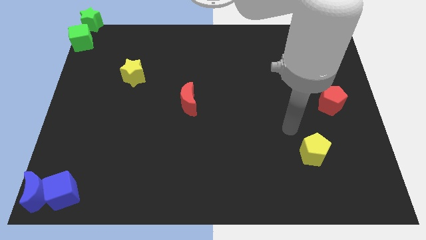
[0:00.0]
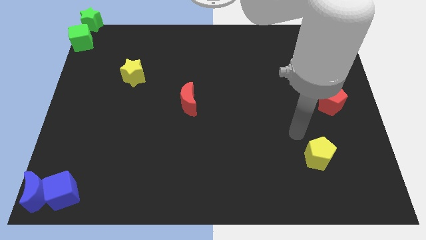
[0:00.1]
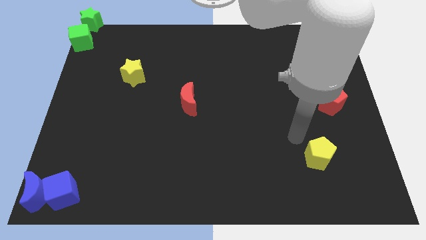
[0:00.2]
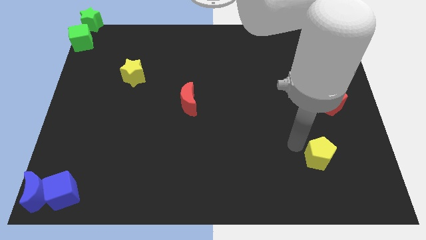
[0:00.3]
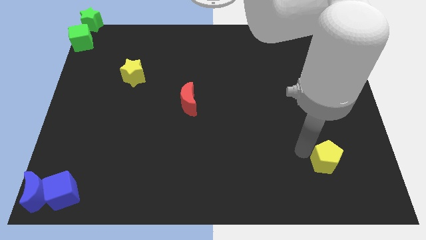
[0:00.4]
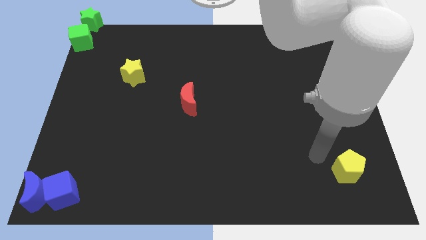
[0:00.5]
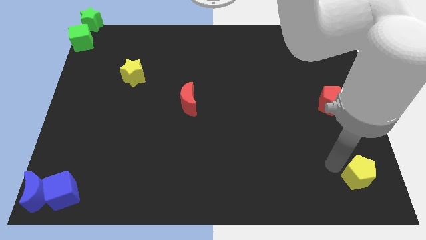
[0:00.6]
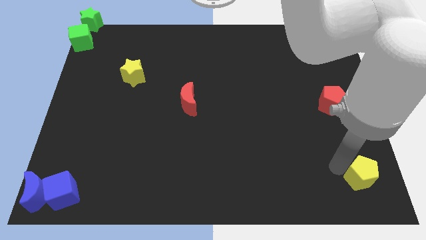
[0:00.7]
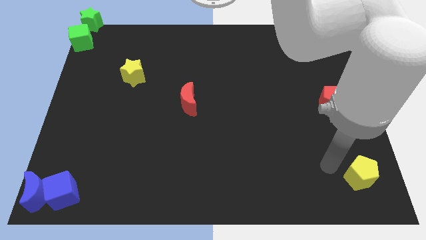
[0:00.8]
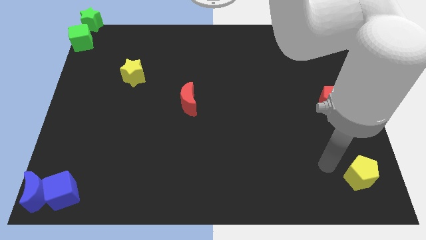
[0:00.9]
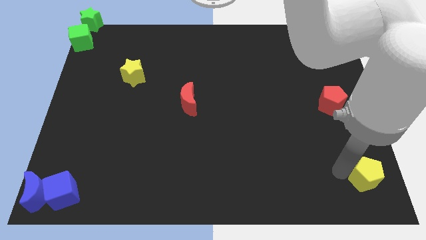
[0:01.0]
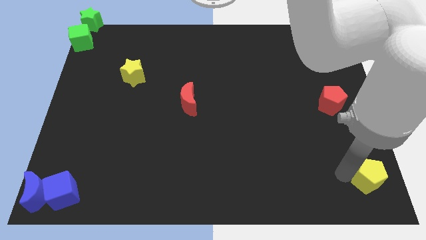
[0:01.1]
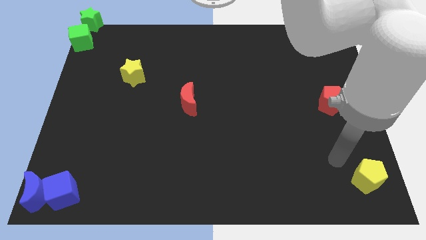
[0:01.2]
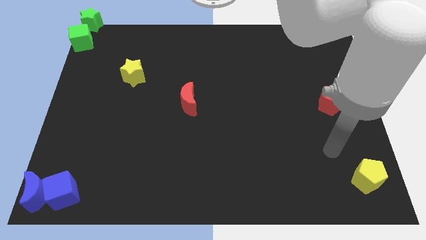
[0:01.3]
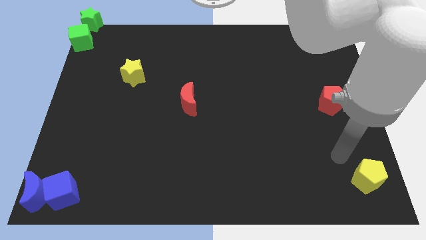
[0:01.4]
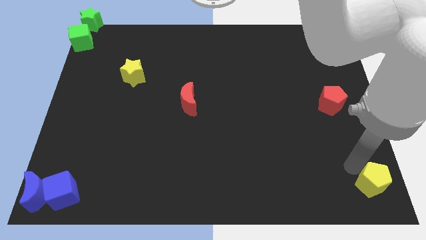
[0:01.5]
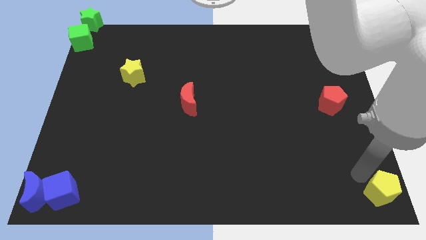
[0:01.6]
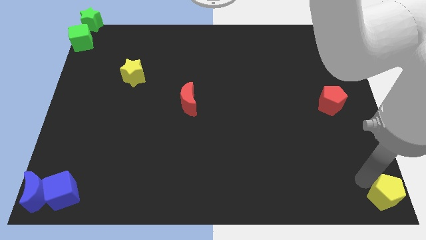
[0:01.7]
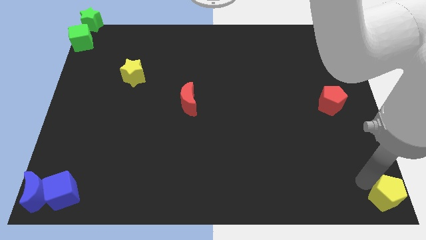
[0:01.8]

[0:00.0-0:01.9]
move the yellow pentagon to the bottom right corner of the board

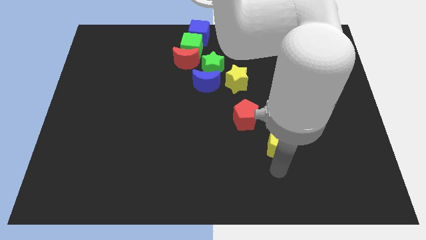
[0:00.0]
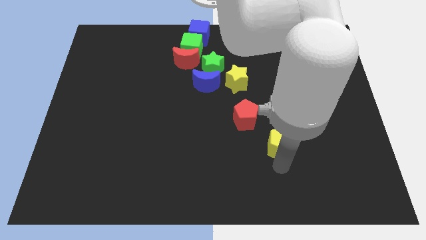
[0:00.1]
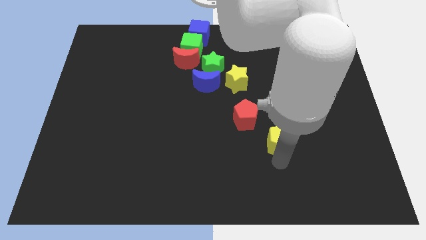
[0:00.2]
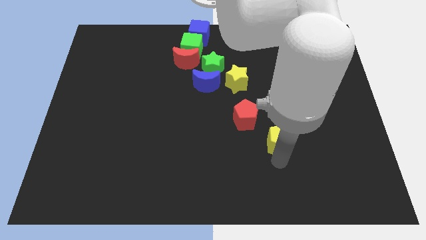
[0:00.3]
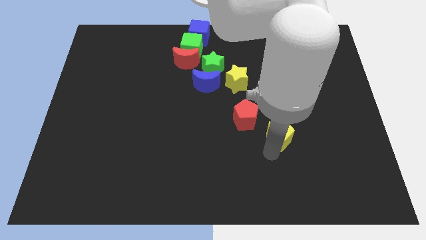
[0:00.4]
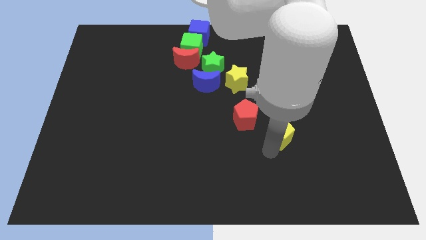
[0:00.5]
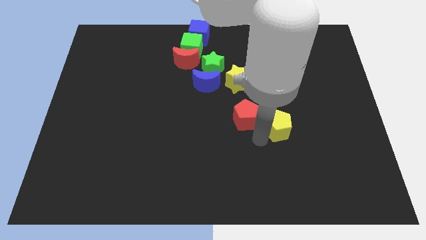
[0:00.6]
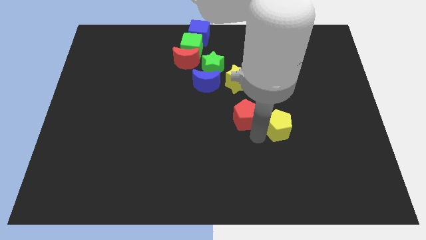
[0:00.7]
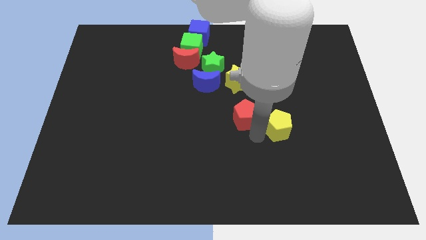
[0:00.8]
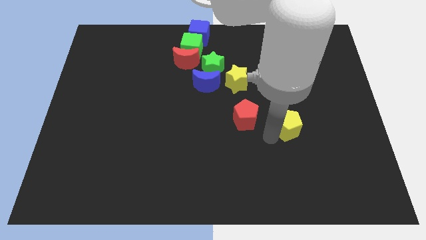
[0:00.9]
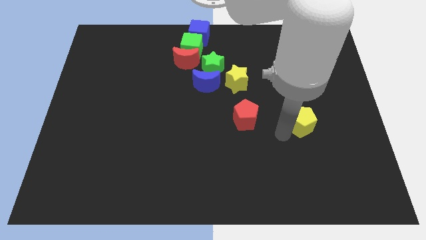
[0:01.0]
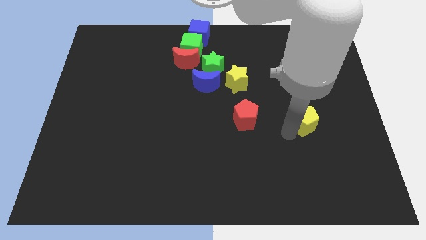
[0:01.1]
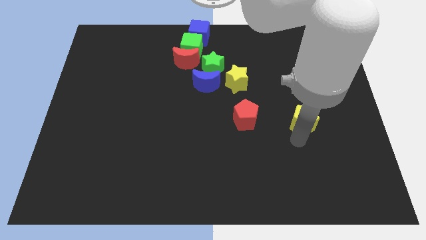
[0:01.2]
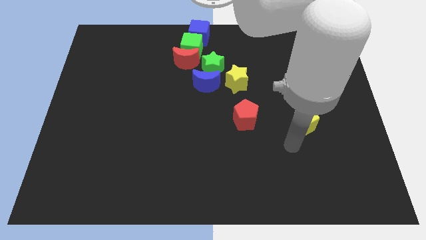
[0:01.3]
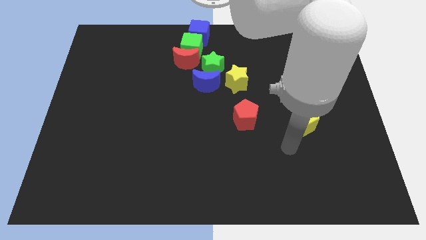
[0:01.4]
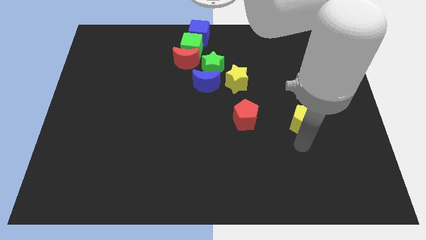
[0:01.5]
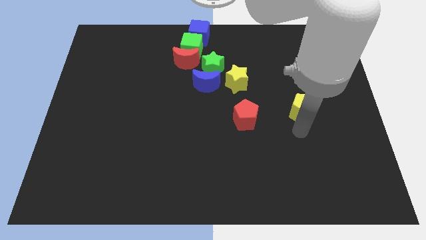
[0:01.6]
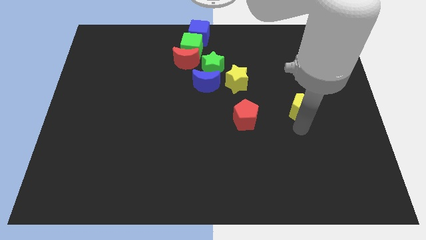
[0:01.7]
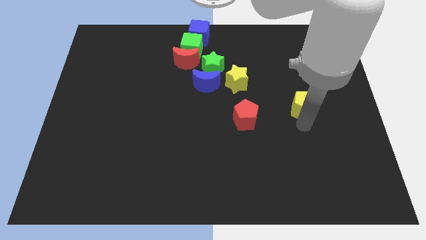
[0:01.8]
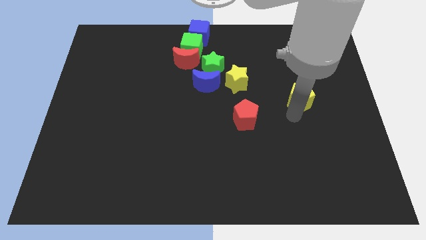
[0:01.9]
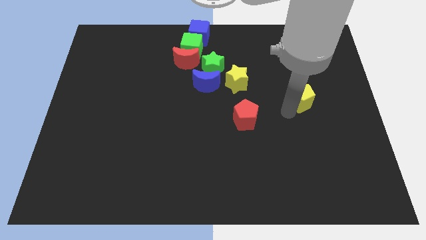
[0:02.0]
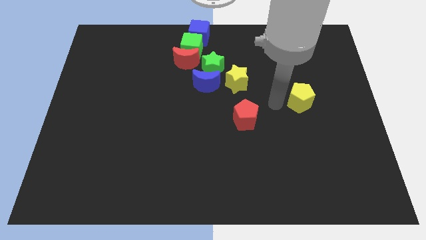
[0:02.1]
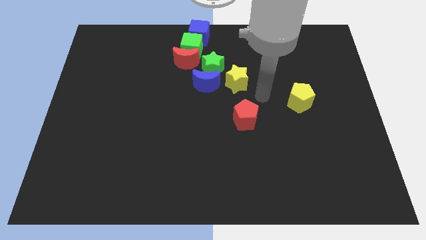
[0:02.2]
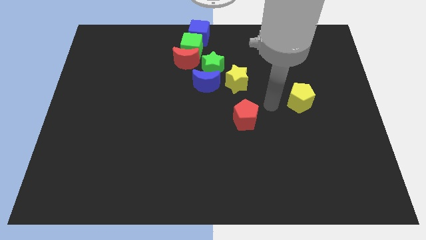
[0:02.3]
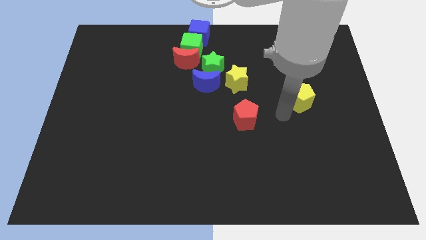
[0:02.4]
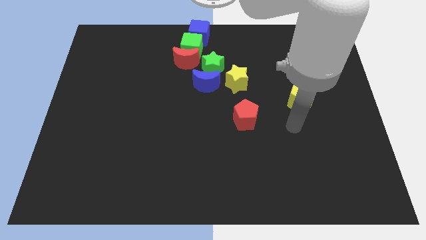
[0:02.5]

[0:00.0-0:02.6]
move the yellow pentagon diagonal to the yellow star

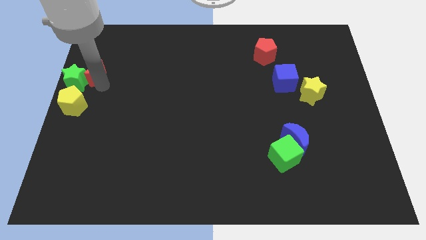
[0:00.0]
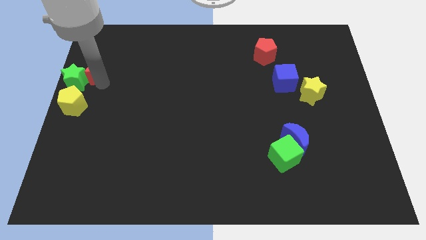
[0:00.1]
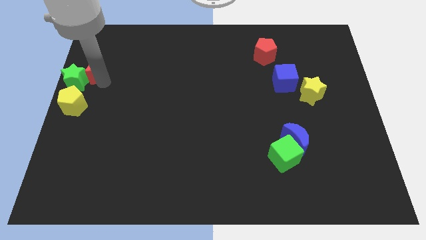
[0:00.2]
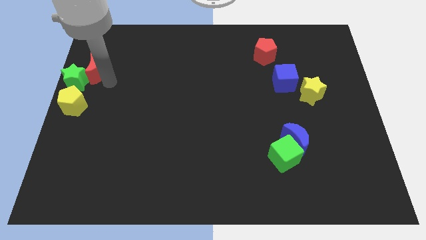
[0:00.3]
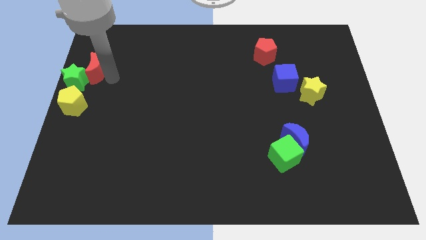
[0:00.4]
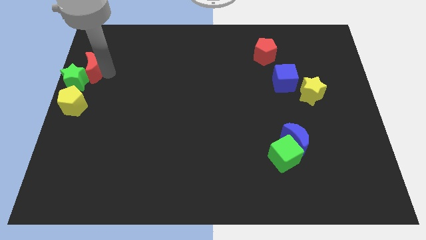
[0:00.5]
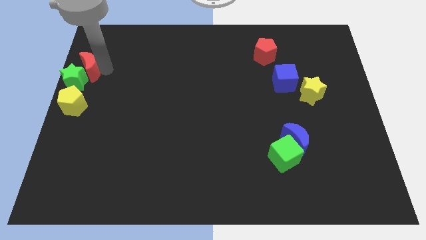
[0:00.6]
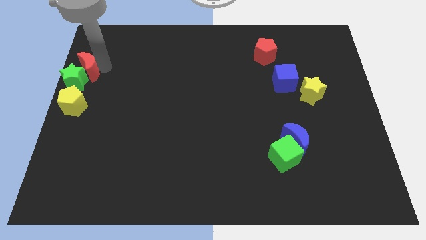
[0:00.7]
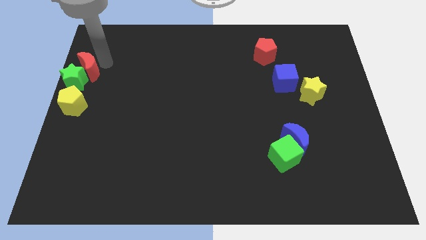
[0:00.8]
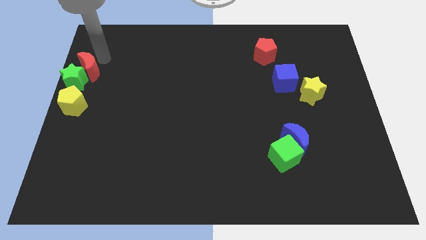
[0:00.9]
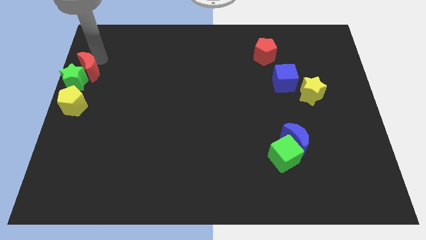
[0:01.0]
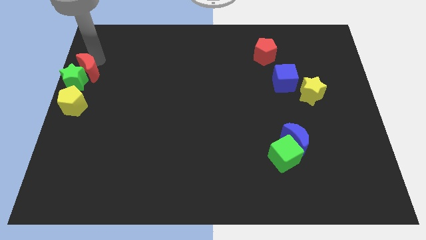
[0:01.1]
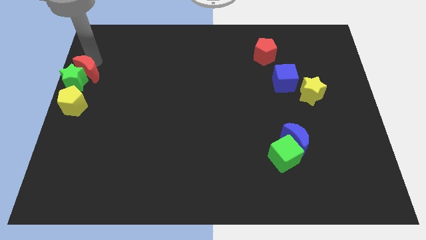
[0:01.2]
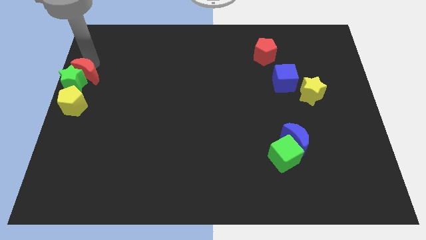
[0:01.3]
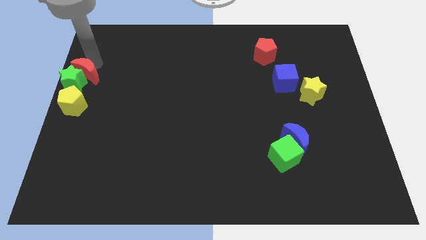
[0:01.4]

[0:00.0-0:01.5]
put the red crescent above the green star

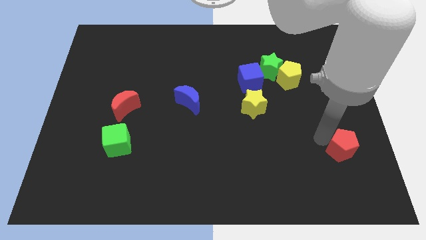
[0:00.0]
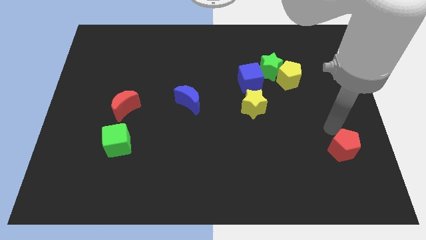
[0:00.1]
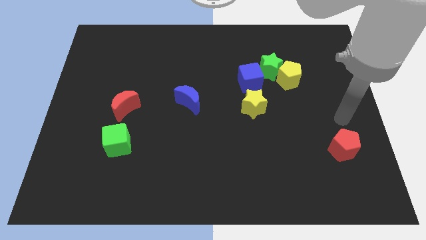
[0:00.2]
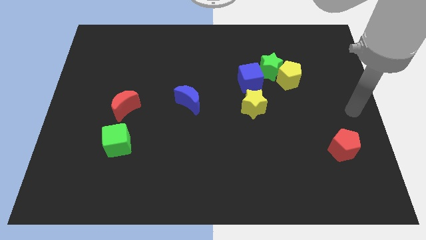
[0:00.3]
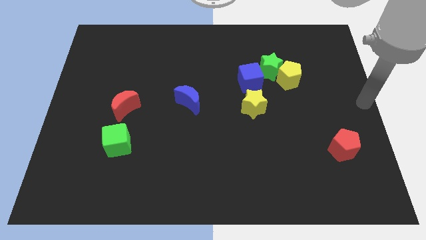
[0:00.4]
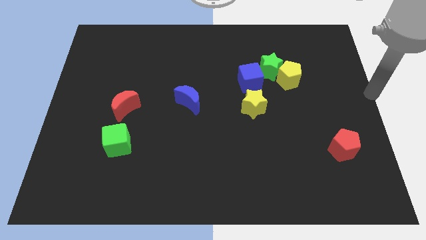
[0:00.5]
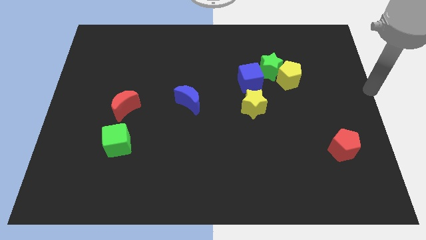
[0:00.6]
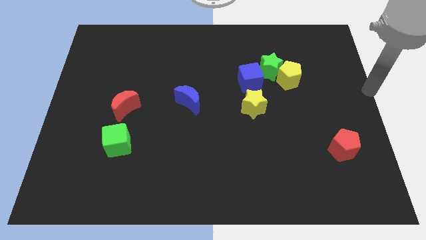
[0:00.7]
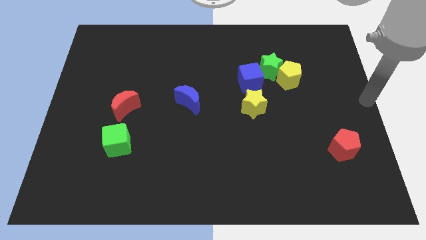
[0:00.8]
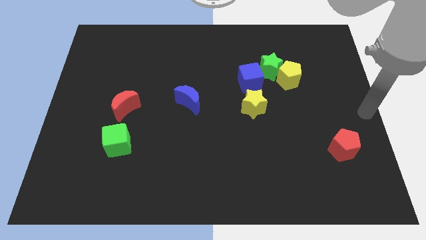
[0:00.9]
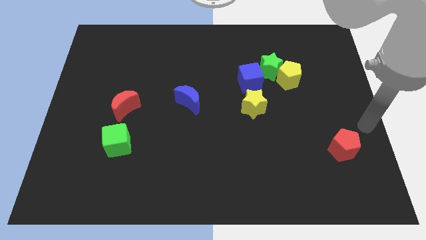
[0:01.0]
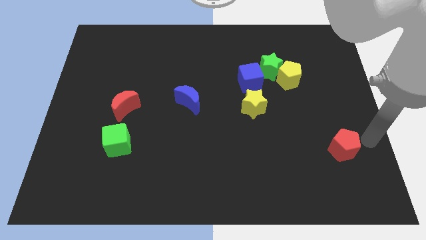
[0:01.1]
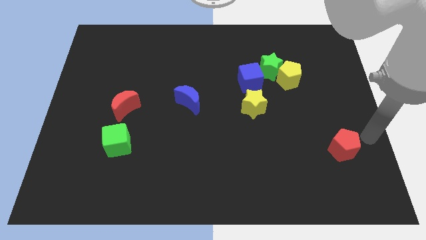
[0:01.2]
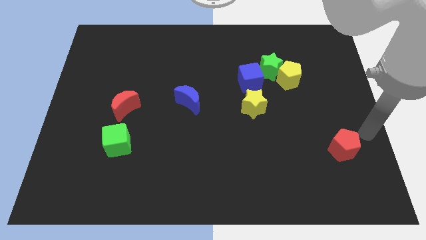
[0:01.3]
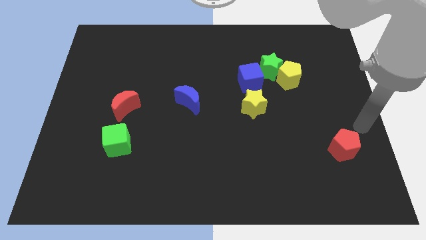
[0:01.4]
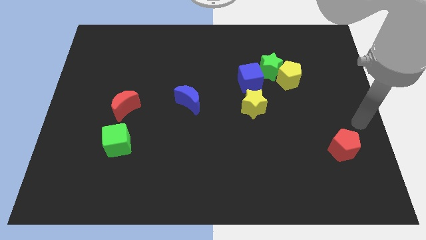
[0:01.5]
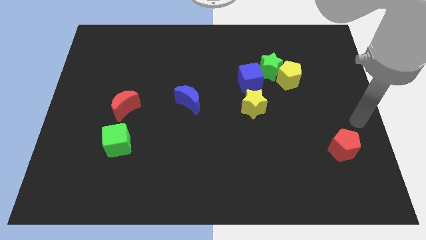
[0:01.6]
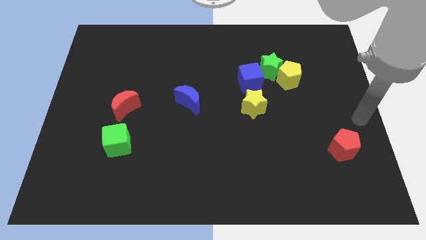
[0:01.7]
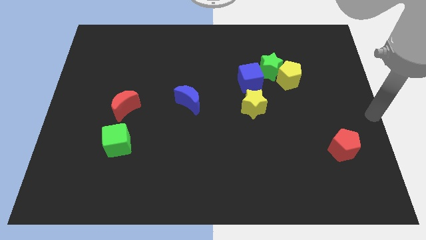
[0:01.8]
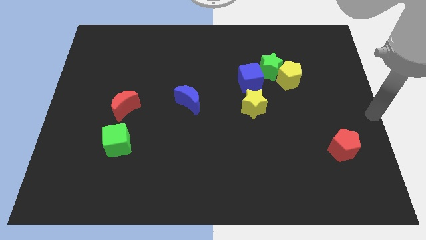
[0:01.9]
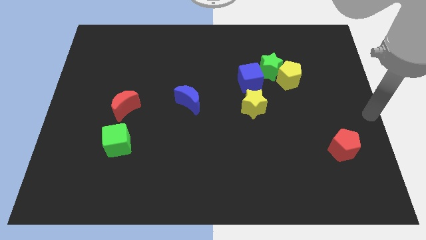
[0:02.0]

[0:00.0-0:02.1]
move your hand away from the red pentagon

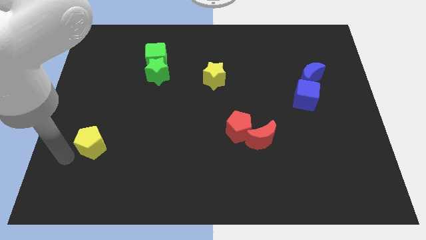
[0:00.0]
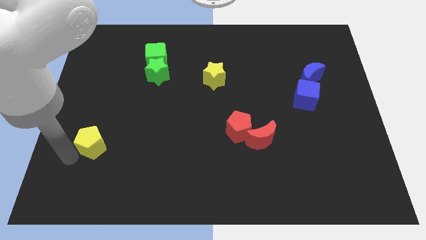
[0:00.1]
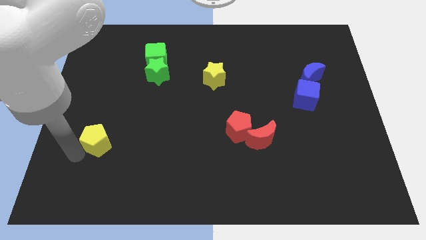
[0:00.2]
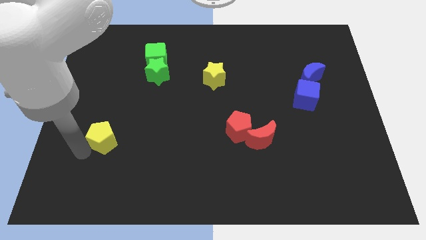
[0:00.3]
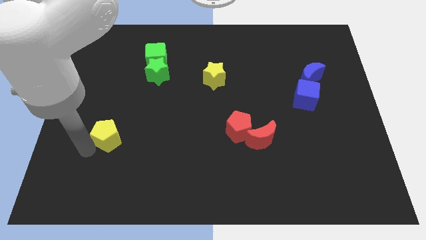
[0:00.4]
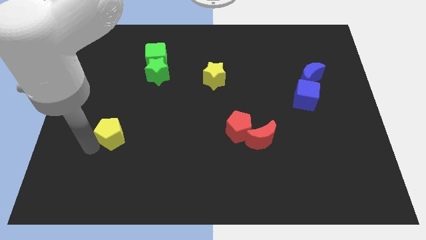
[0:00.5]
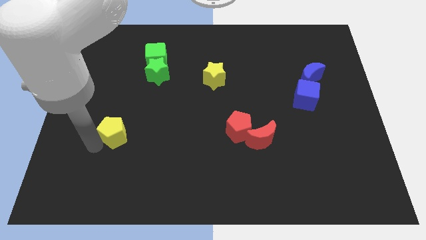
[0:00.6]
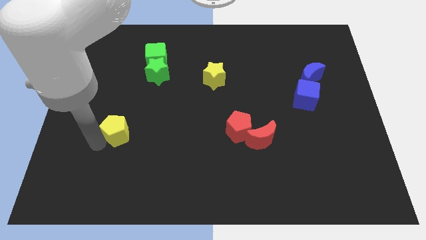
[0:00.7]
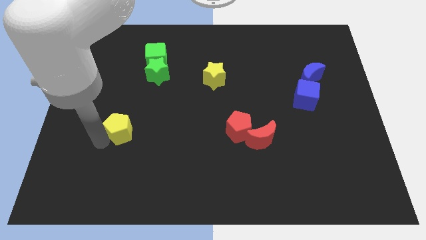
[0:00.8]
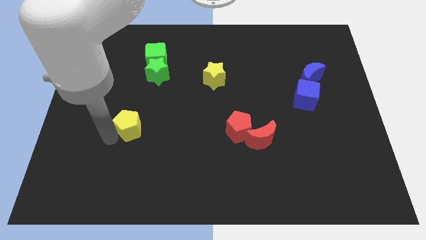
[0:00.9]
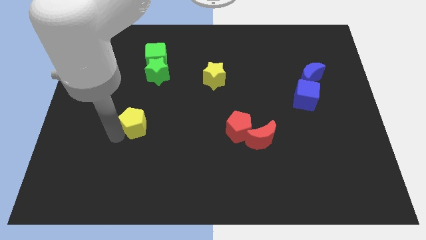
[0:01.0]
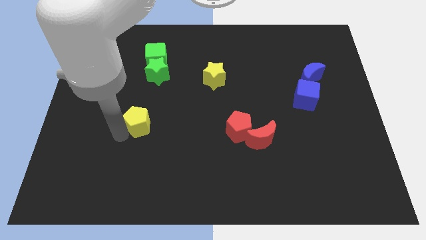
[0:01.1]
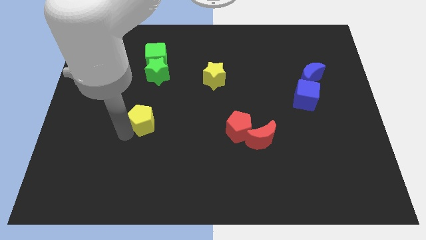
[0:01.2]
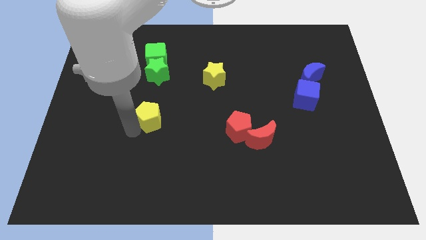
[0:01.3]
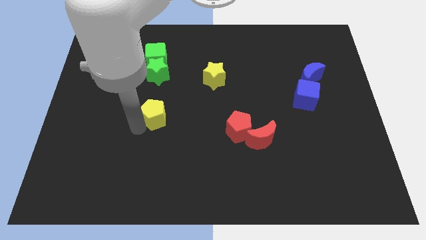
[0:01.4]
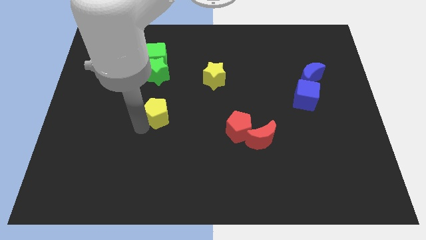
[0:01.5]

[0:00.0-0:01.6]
move the yellow star vertically below the green star
